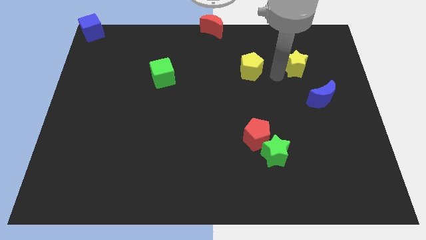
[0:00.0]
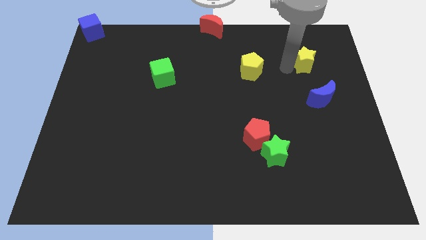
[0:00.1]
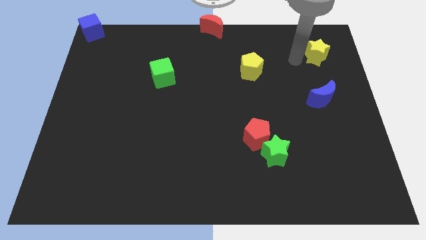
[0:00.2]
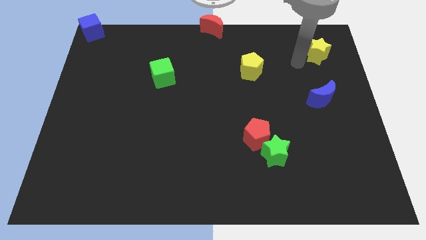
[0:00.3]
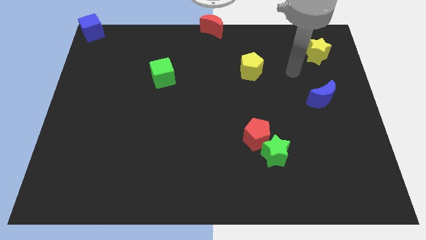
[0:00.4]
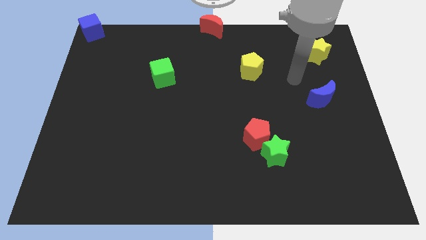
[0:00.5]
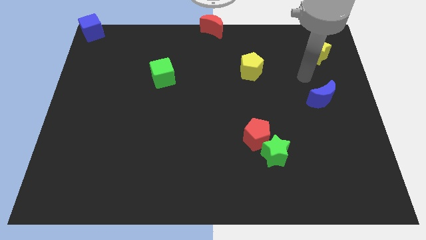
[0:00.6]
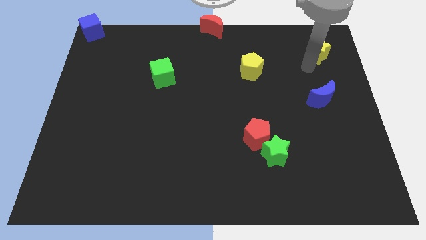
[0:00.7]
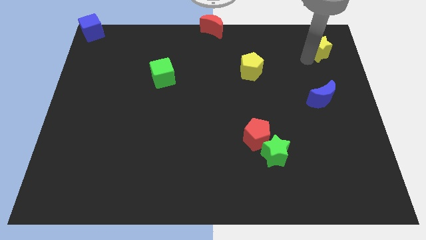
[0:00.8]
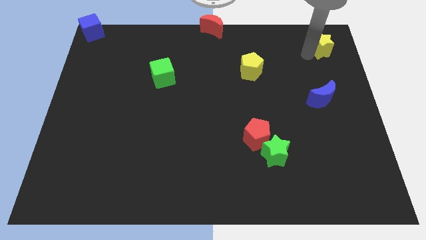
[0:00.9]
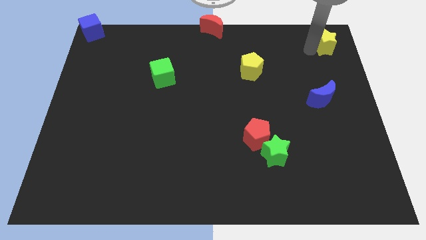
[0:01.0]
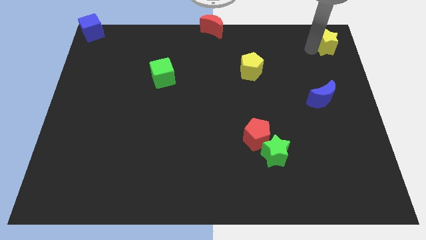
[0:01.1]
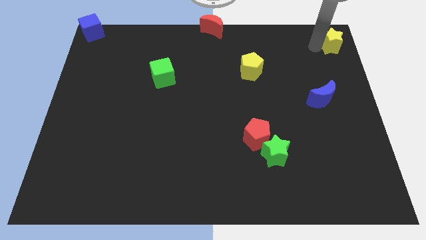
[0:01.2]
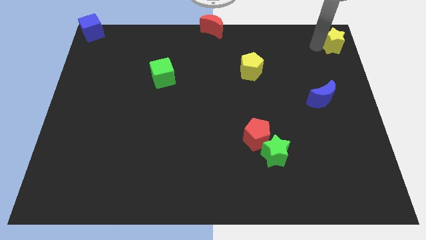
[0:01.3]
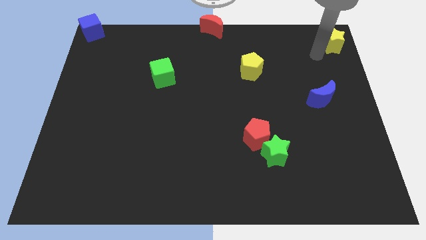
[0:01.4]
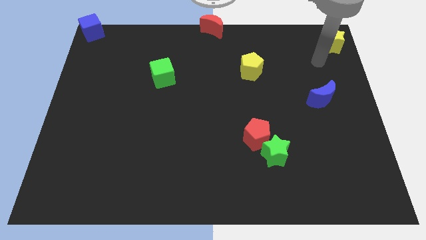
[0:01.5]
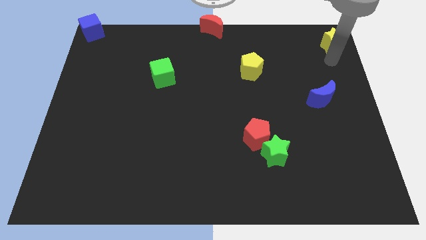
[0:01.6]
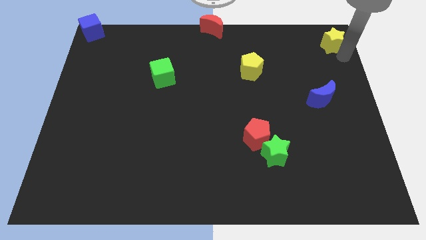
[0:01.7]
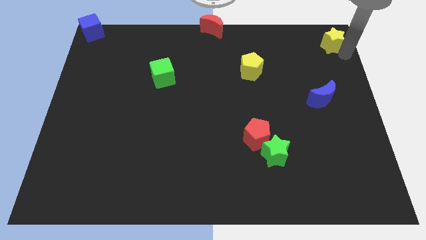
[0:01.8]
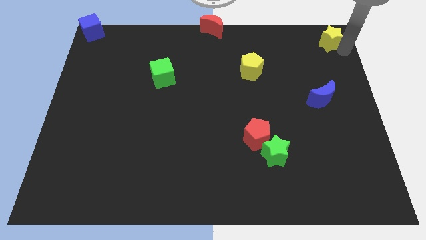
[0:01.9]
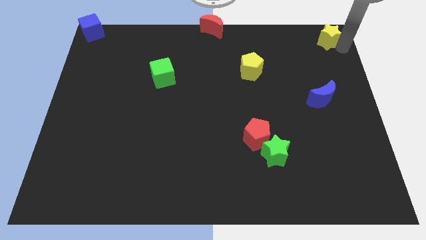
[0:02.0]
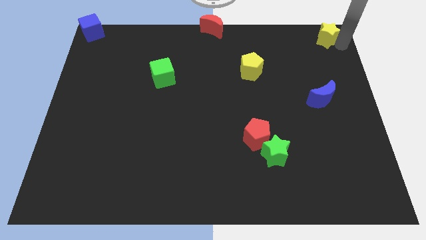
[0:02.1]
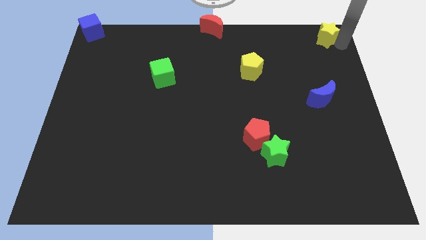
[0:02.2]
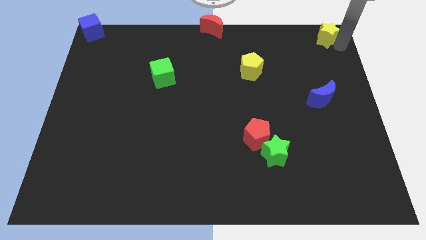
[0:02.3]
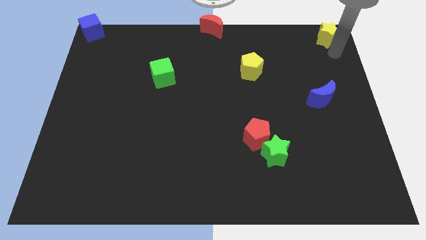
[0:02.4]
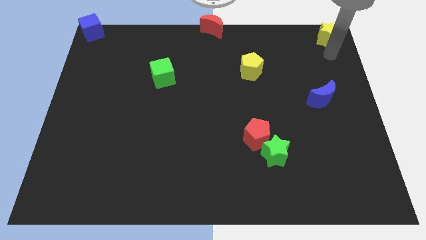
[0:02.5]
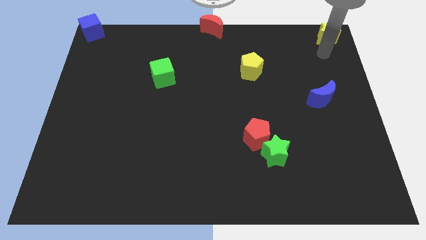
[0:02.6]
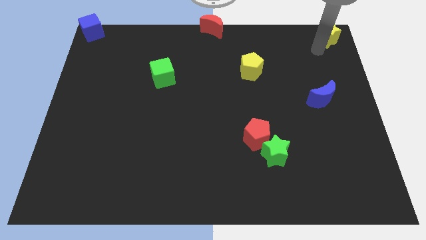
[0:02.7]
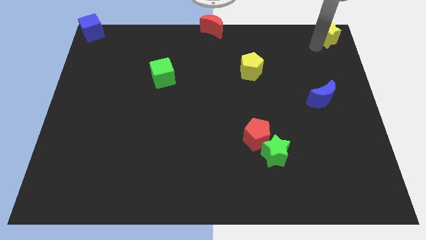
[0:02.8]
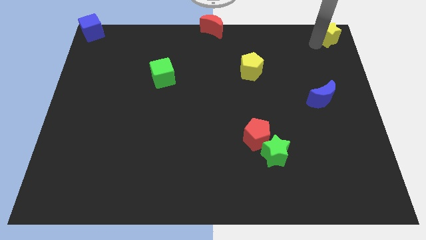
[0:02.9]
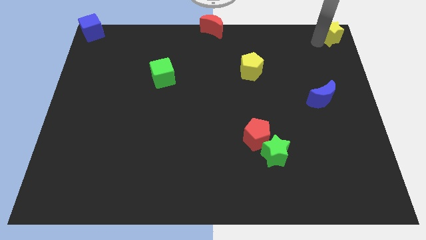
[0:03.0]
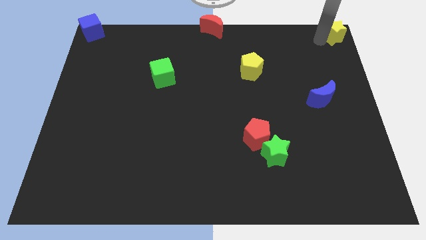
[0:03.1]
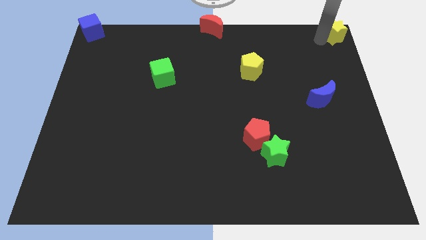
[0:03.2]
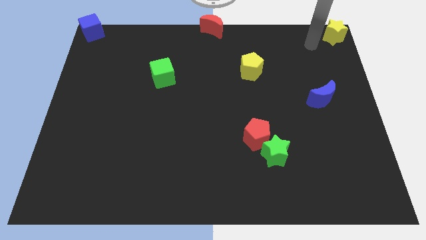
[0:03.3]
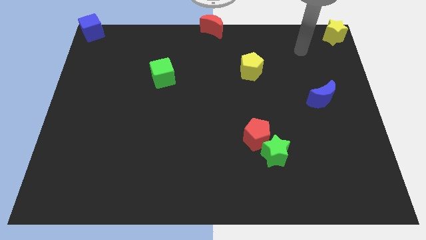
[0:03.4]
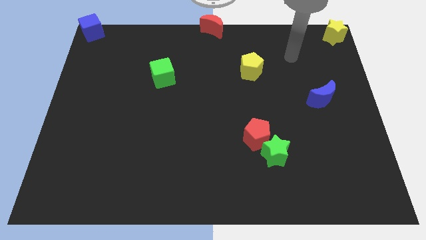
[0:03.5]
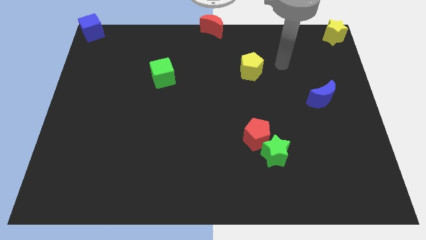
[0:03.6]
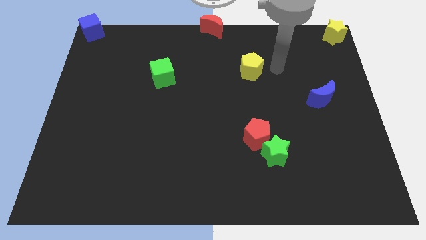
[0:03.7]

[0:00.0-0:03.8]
place the yellow star at the top right corner of the board

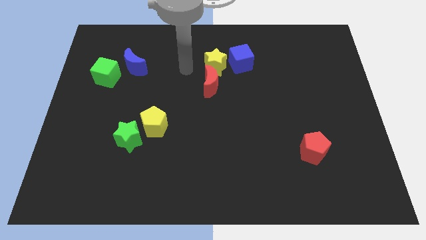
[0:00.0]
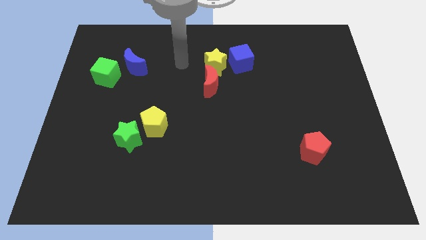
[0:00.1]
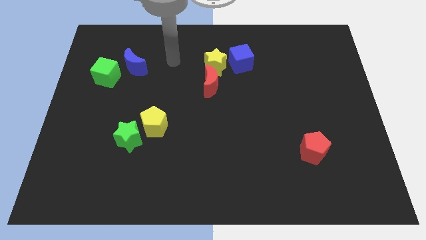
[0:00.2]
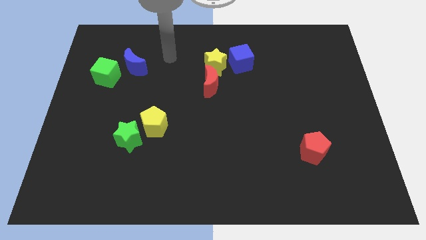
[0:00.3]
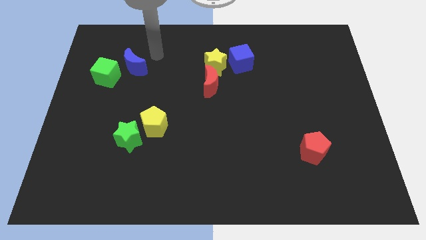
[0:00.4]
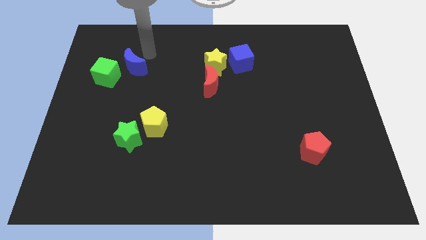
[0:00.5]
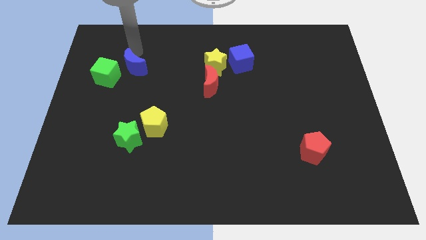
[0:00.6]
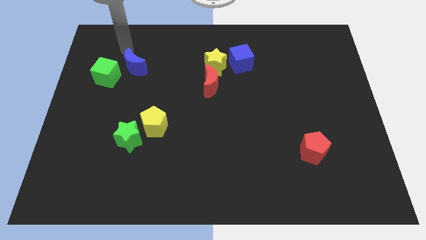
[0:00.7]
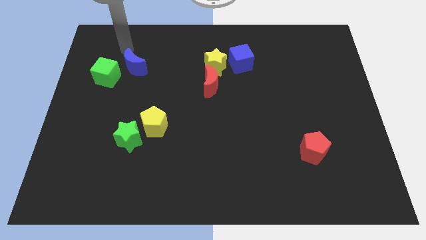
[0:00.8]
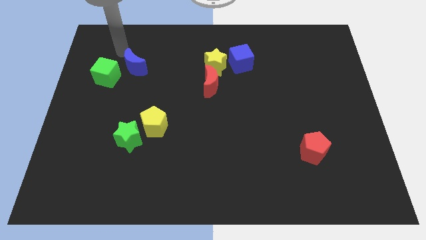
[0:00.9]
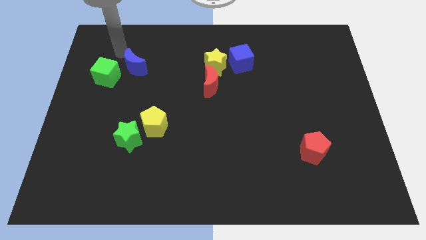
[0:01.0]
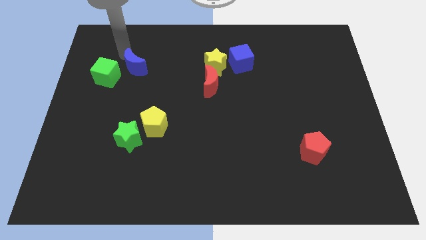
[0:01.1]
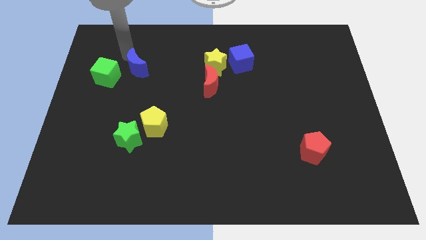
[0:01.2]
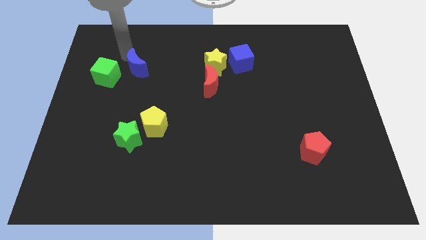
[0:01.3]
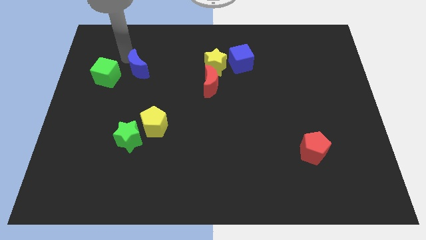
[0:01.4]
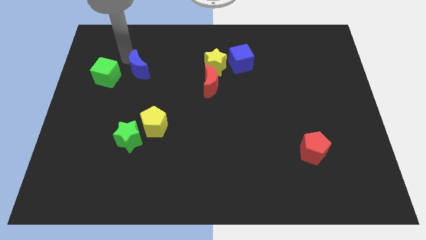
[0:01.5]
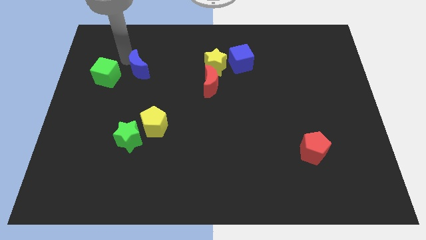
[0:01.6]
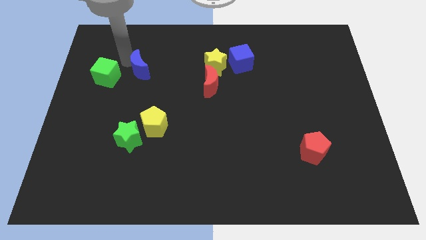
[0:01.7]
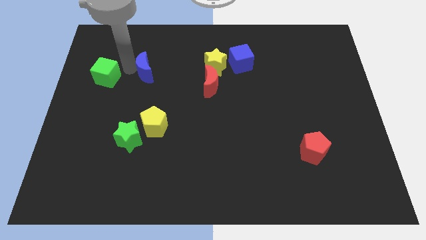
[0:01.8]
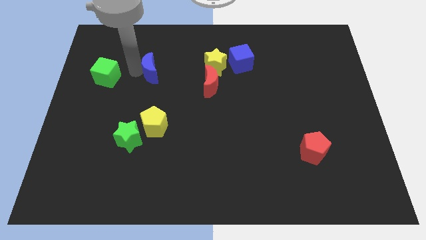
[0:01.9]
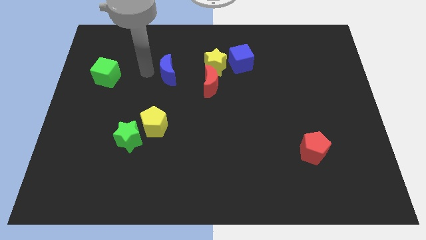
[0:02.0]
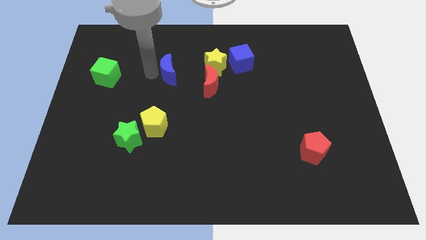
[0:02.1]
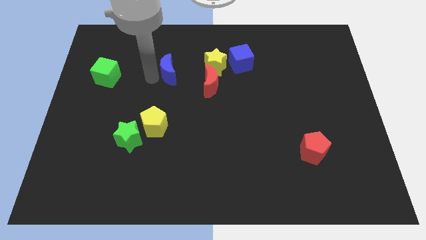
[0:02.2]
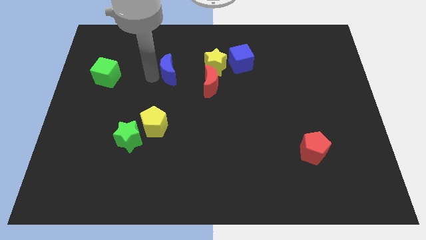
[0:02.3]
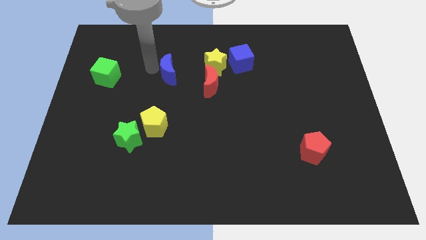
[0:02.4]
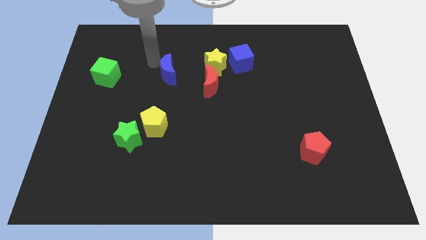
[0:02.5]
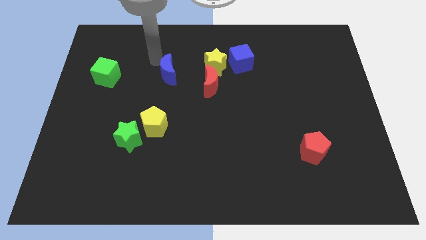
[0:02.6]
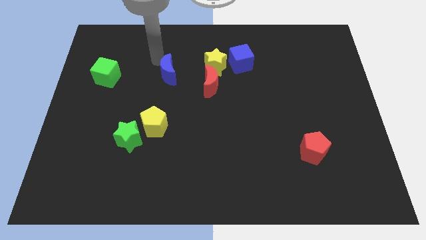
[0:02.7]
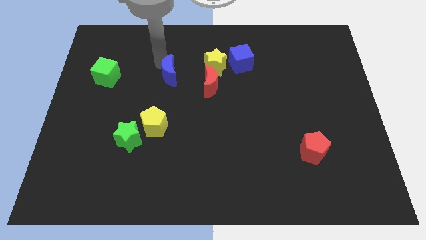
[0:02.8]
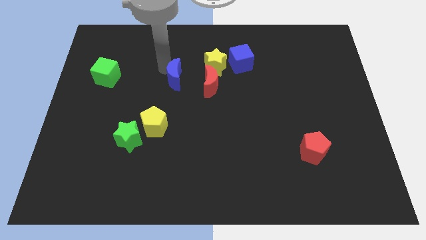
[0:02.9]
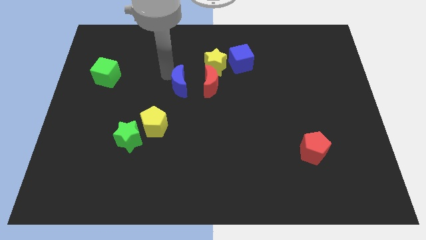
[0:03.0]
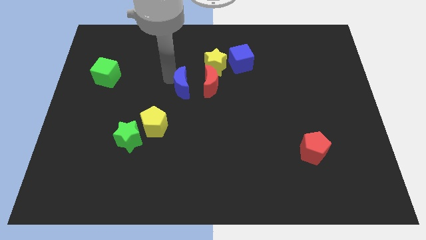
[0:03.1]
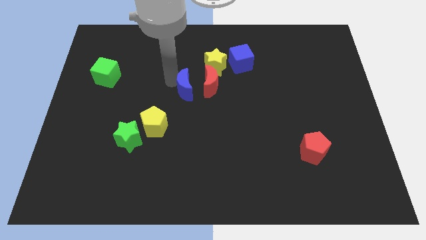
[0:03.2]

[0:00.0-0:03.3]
push the blue crescent to the left of the red crescent

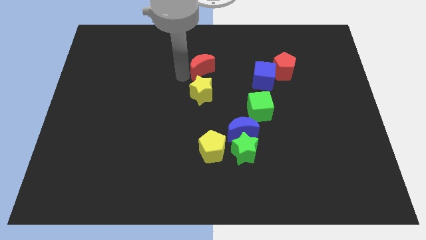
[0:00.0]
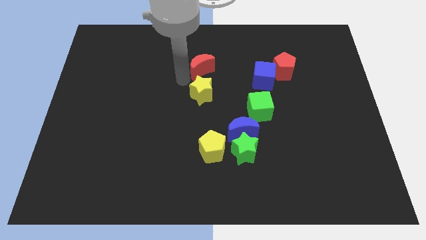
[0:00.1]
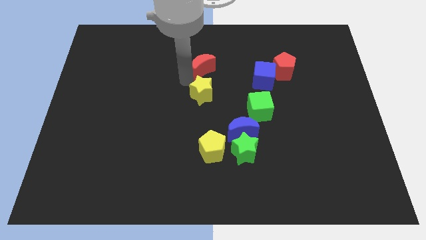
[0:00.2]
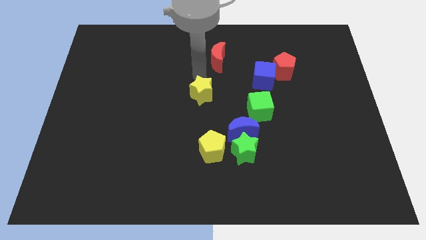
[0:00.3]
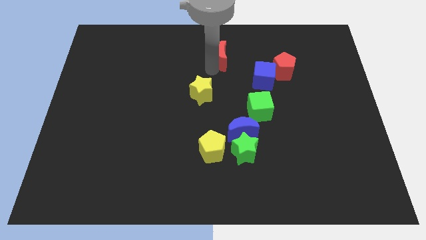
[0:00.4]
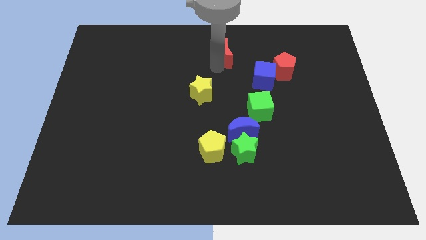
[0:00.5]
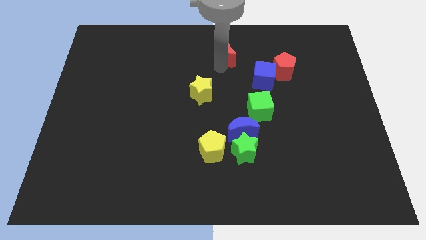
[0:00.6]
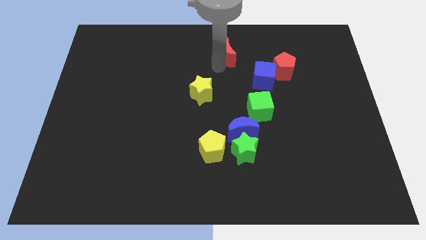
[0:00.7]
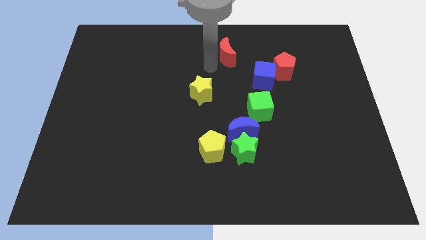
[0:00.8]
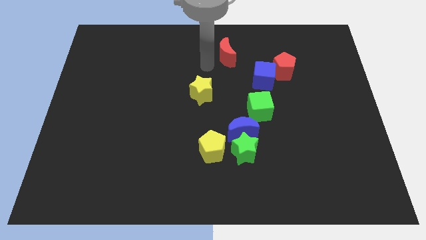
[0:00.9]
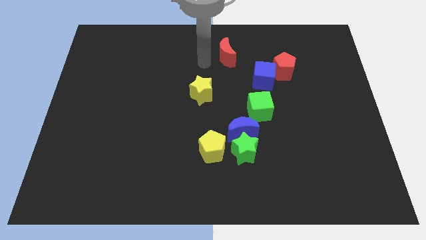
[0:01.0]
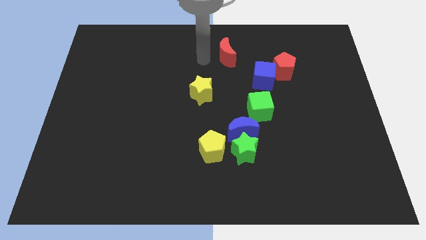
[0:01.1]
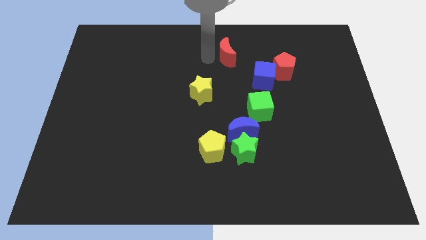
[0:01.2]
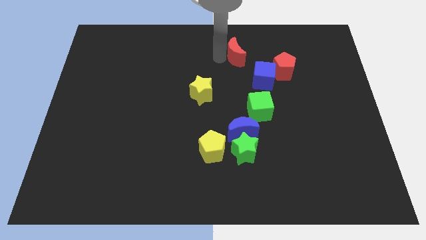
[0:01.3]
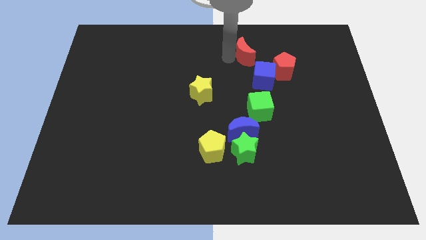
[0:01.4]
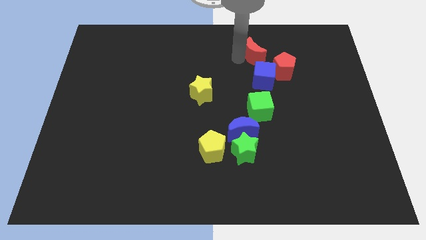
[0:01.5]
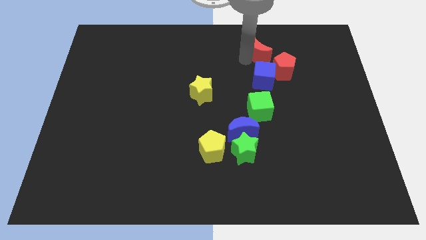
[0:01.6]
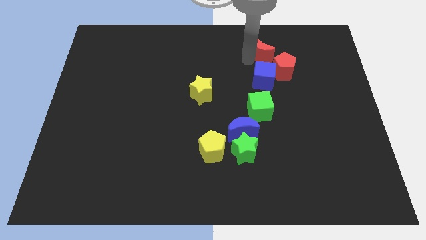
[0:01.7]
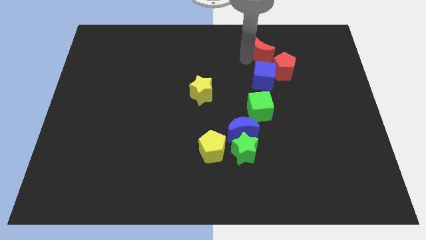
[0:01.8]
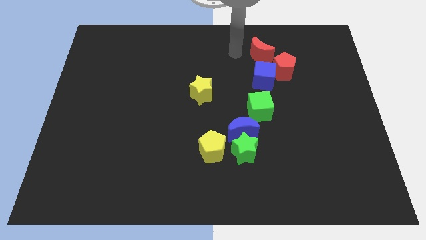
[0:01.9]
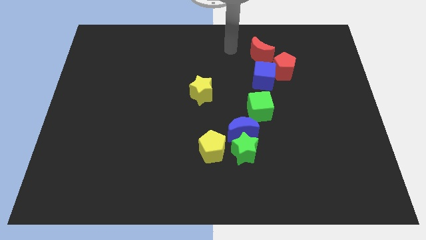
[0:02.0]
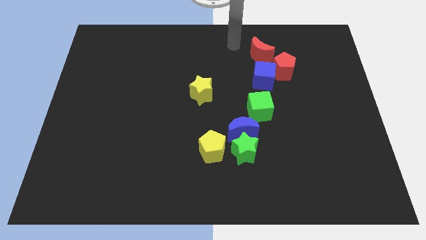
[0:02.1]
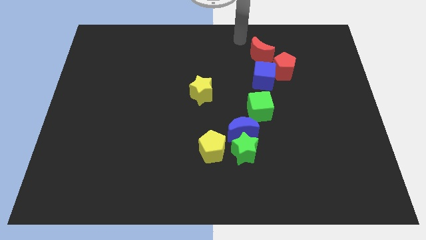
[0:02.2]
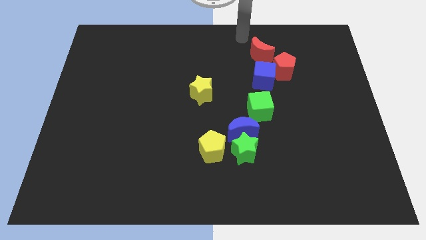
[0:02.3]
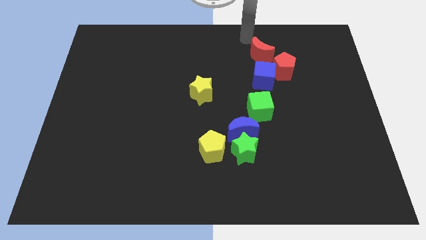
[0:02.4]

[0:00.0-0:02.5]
move the red crescent above to the red pentagon
